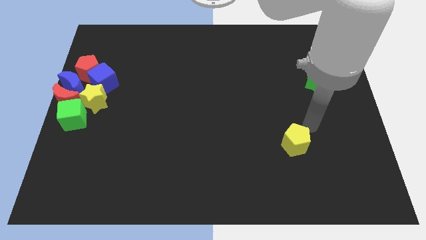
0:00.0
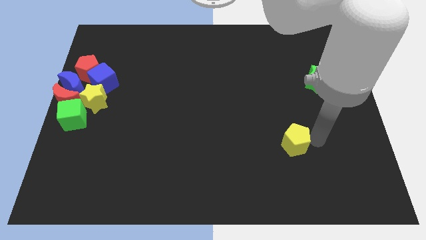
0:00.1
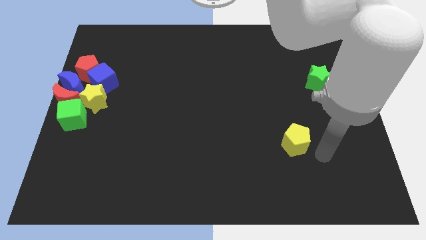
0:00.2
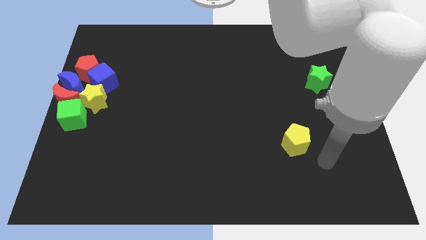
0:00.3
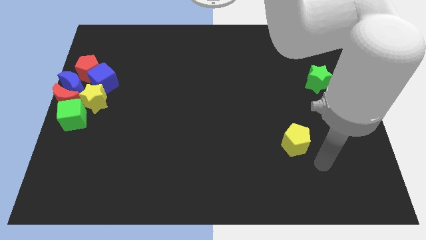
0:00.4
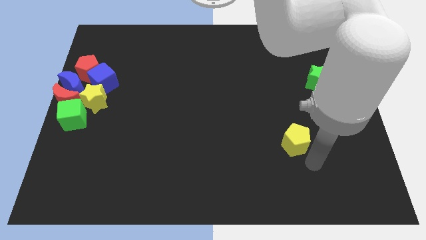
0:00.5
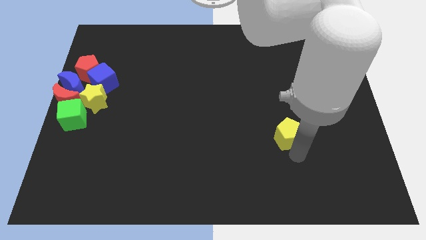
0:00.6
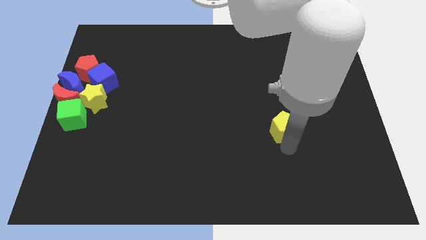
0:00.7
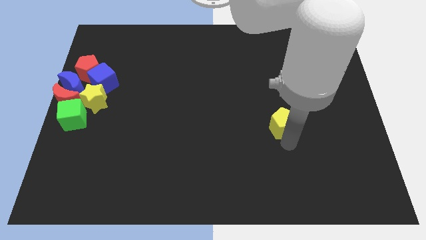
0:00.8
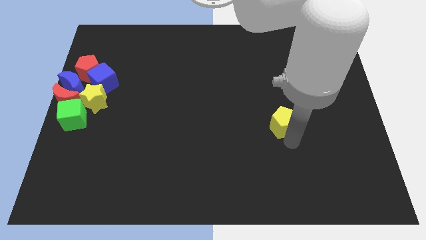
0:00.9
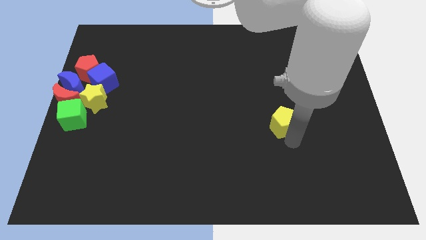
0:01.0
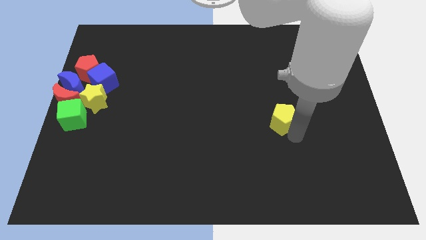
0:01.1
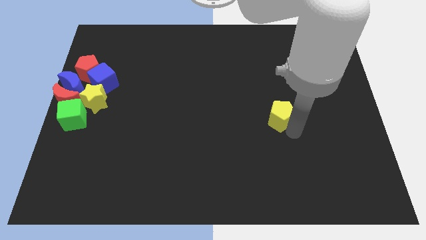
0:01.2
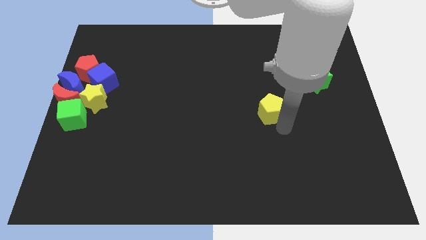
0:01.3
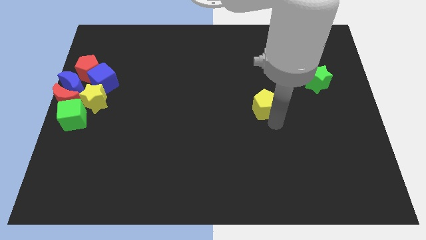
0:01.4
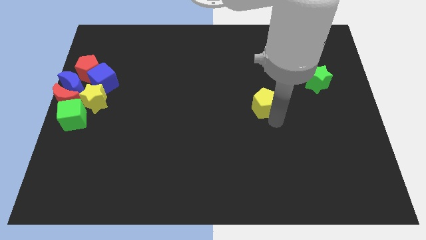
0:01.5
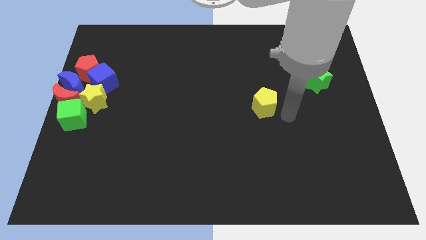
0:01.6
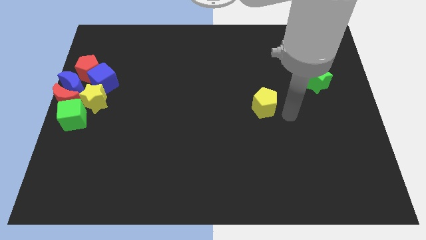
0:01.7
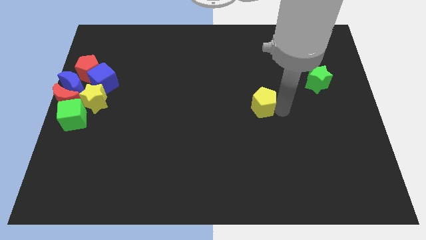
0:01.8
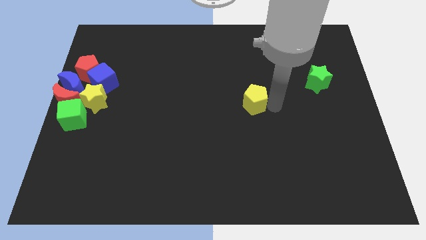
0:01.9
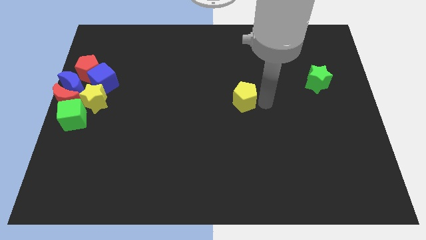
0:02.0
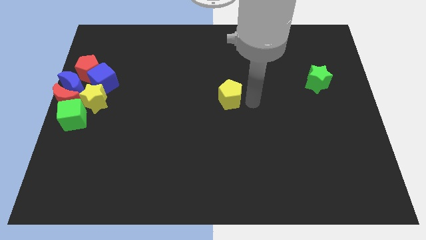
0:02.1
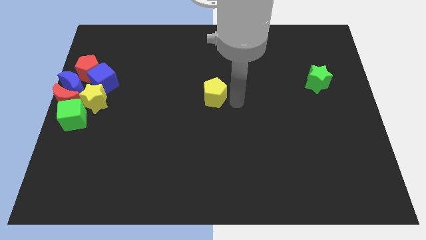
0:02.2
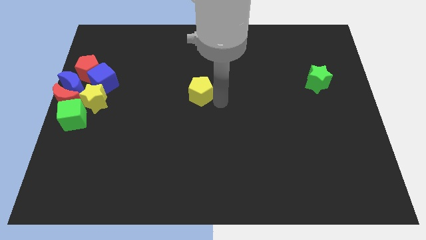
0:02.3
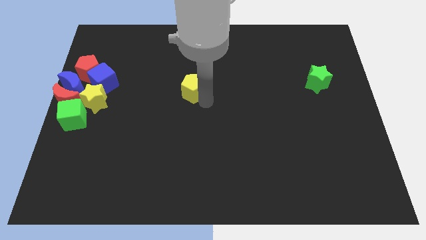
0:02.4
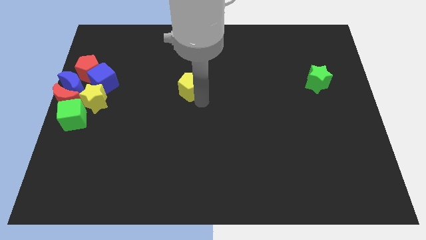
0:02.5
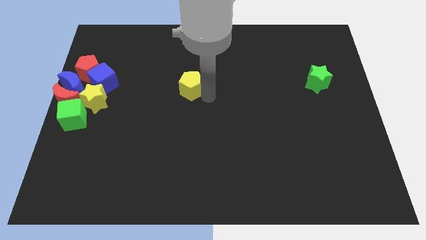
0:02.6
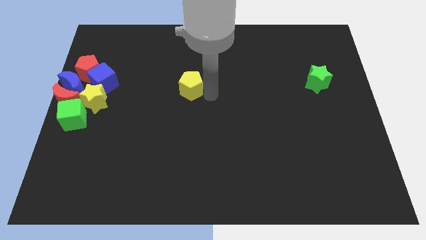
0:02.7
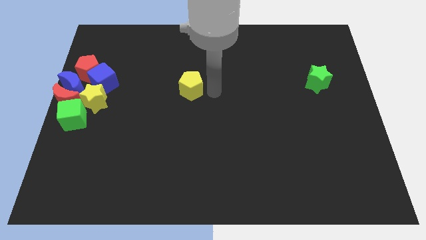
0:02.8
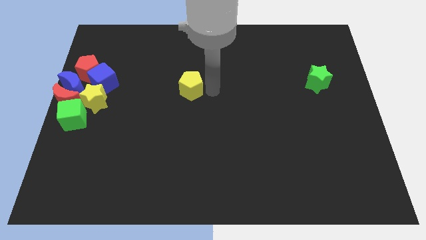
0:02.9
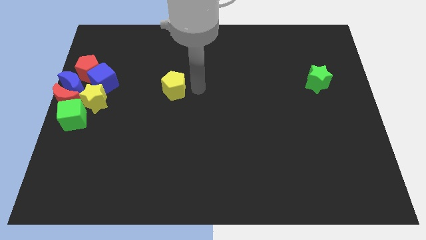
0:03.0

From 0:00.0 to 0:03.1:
push yellow pentagon to the right of blue cube

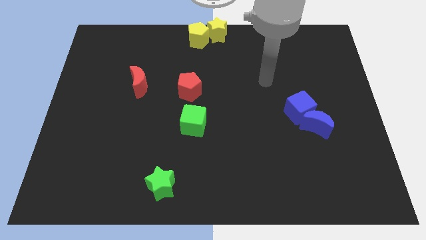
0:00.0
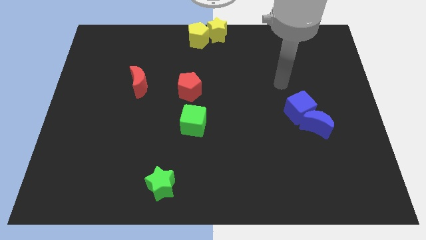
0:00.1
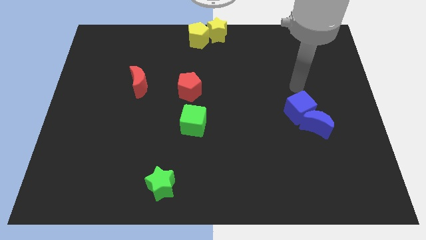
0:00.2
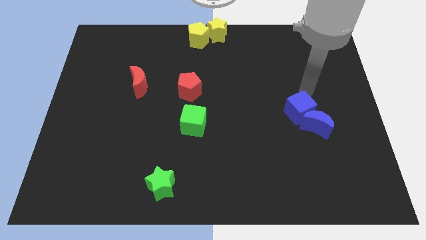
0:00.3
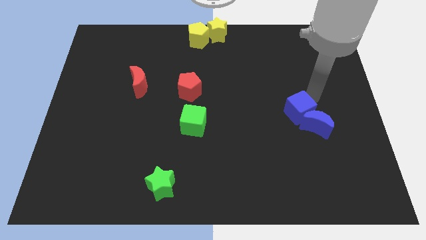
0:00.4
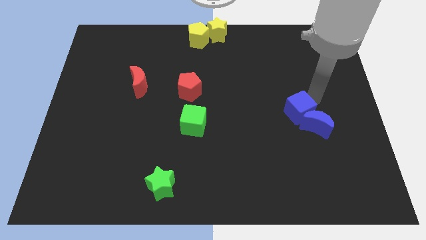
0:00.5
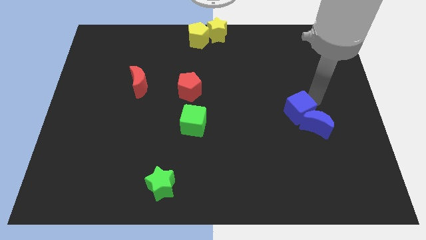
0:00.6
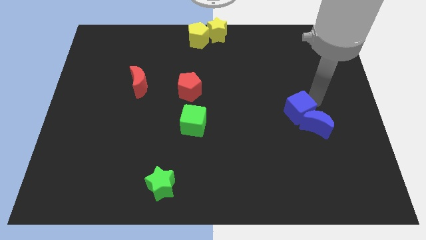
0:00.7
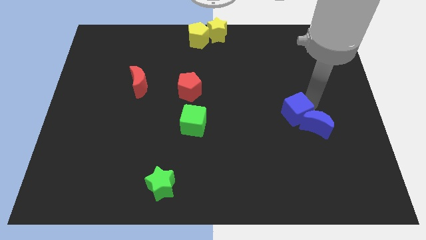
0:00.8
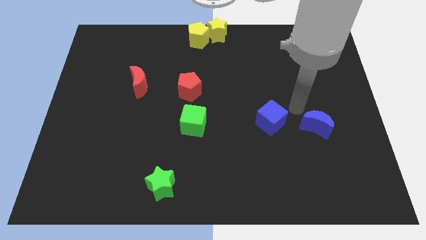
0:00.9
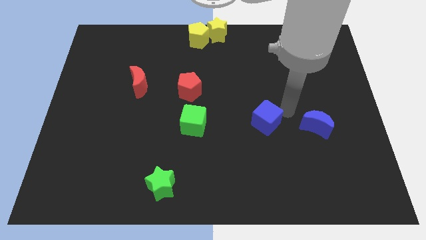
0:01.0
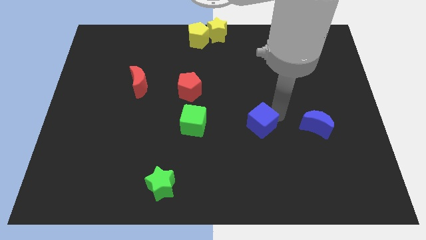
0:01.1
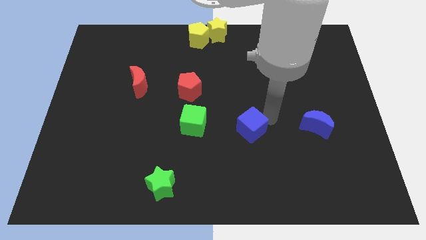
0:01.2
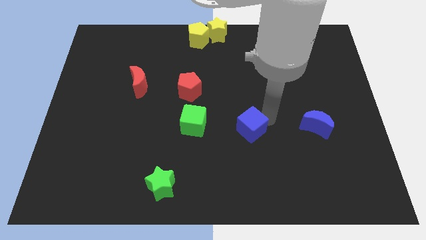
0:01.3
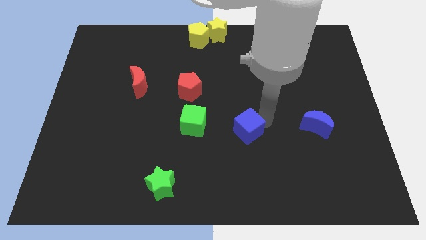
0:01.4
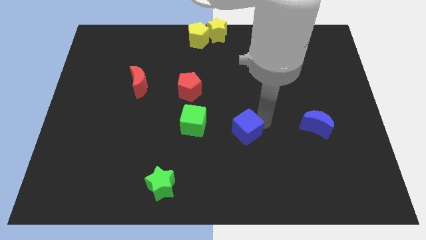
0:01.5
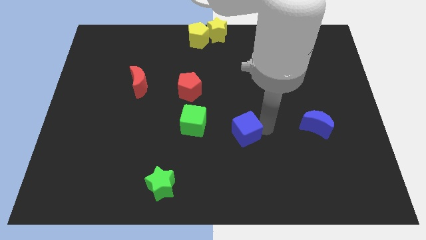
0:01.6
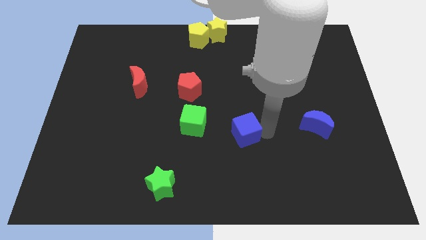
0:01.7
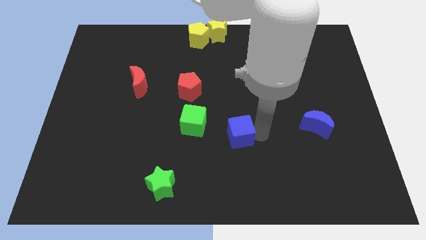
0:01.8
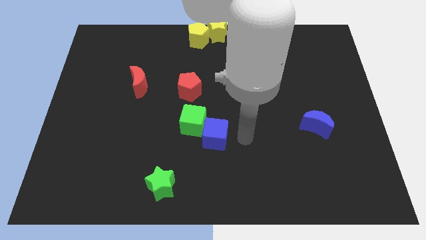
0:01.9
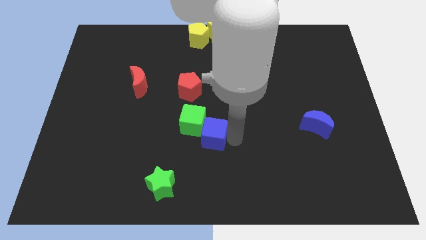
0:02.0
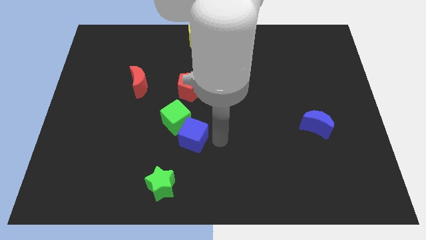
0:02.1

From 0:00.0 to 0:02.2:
push the blue cube into the green cube

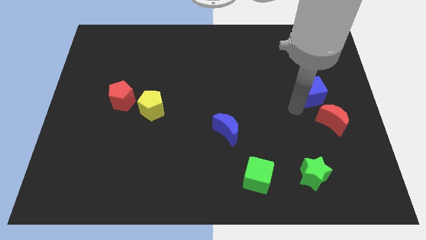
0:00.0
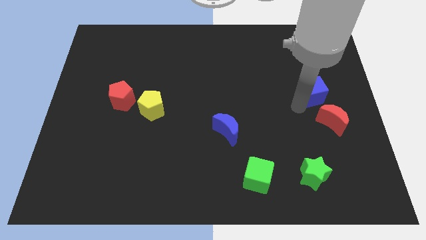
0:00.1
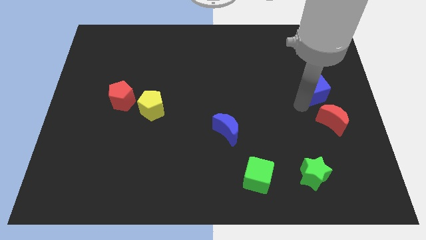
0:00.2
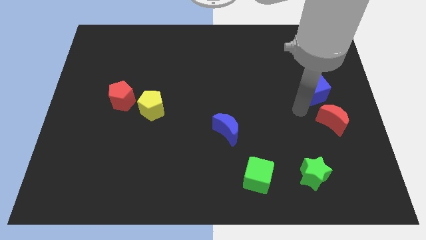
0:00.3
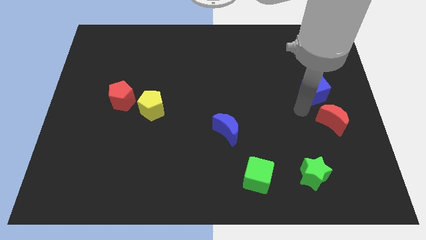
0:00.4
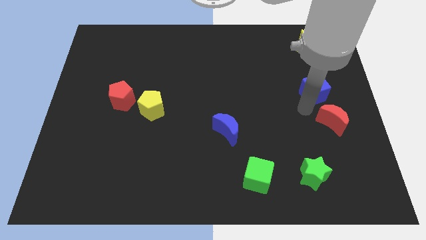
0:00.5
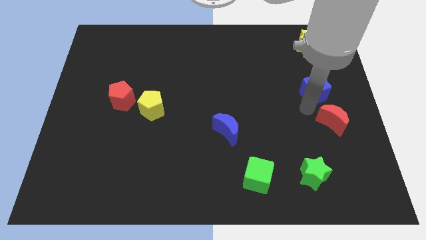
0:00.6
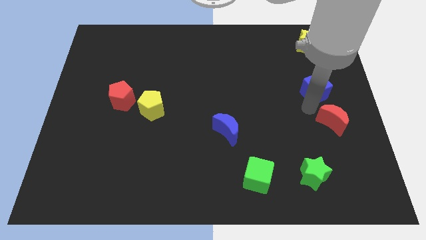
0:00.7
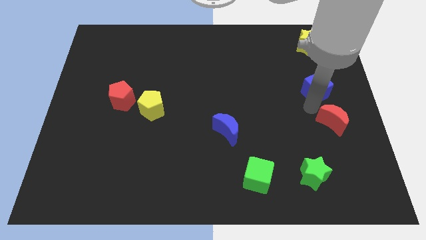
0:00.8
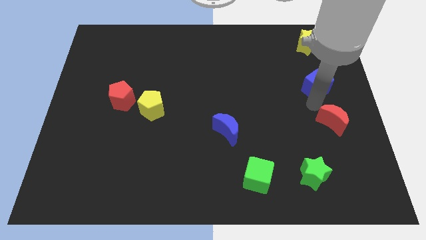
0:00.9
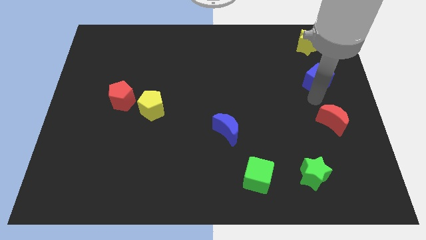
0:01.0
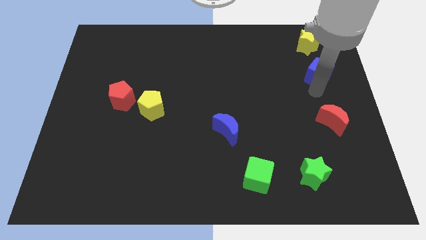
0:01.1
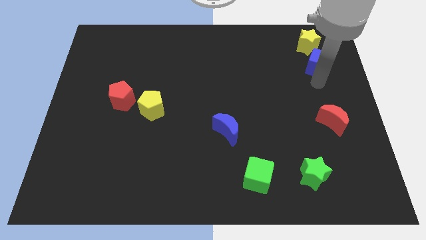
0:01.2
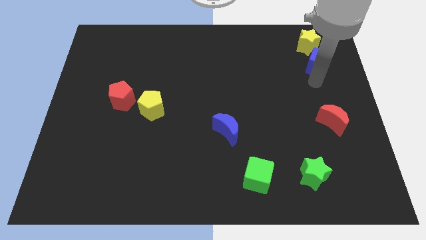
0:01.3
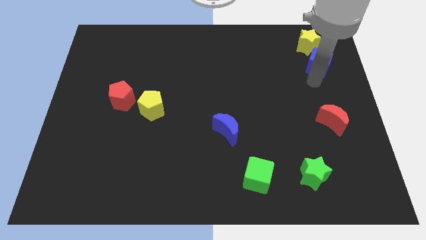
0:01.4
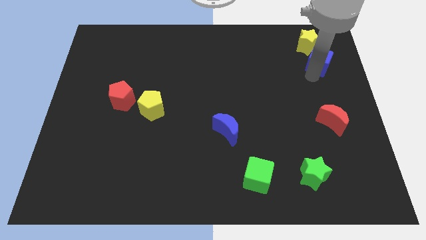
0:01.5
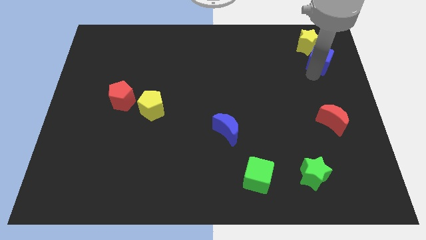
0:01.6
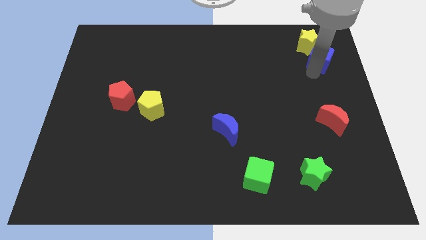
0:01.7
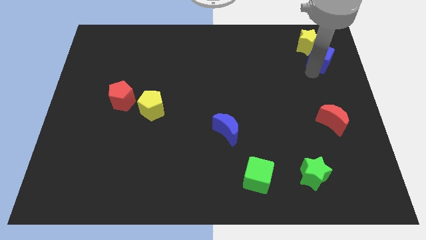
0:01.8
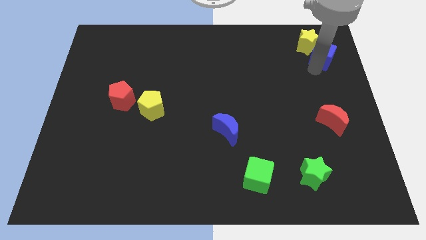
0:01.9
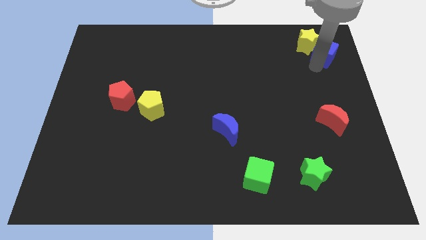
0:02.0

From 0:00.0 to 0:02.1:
move blue cube towards yellow star

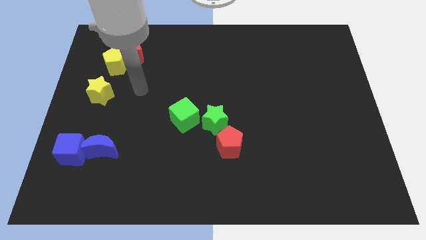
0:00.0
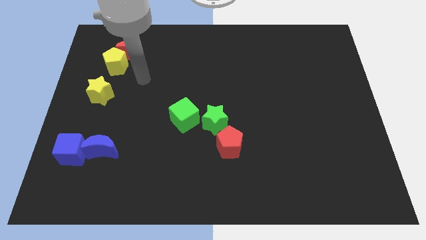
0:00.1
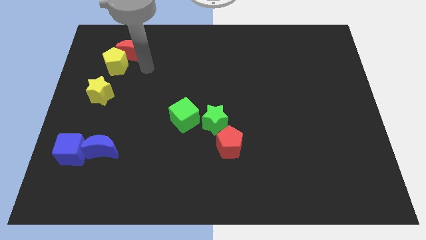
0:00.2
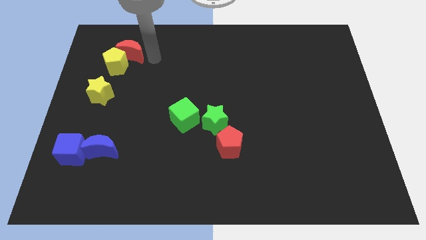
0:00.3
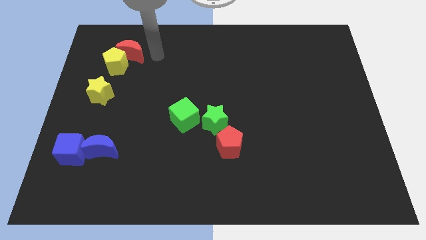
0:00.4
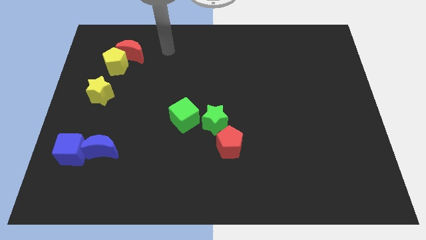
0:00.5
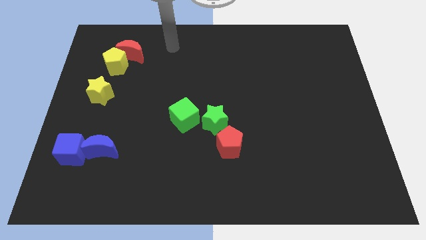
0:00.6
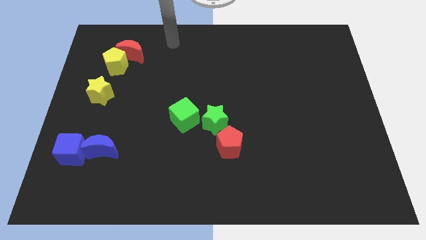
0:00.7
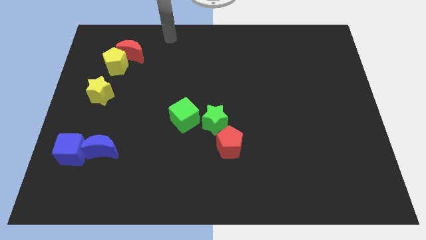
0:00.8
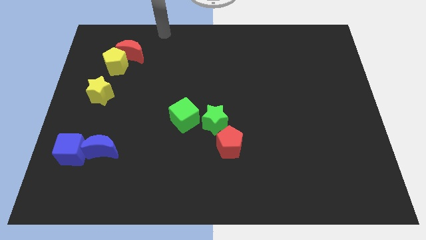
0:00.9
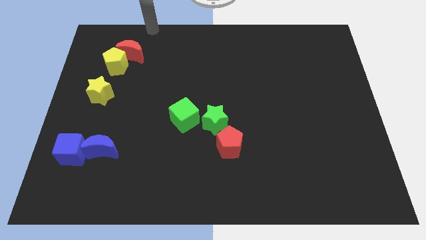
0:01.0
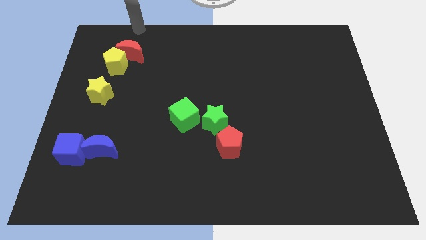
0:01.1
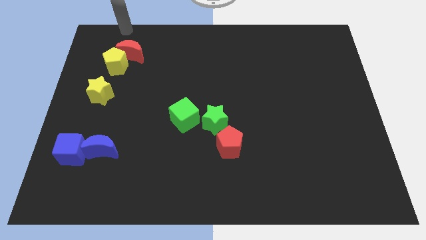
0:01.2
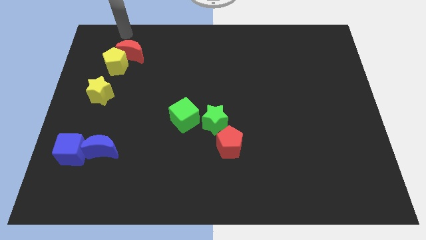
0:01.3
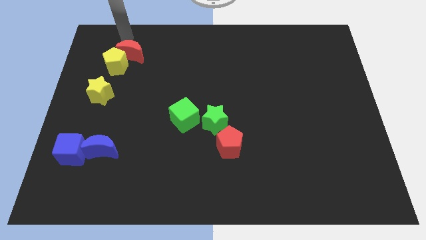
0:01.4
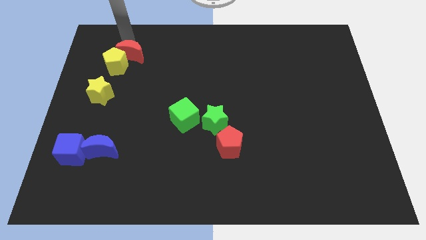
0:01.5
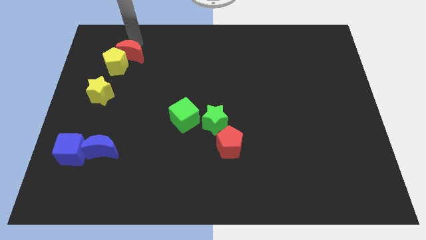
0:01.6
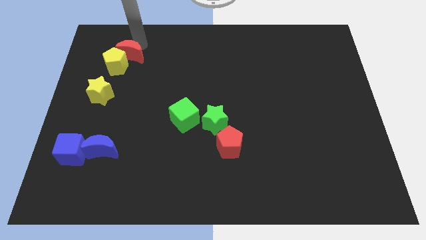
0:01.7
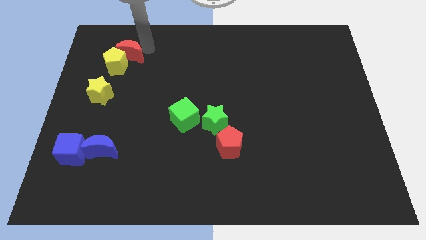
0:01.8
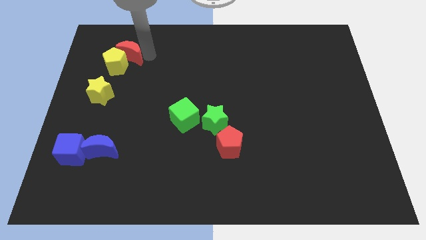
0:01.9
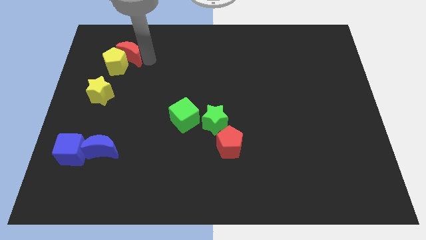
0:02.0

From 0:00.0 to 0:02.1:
place the arm to the top right of red crescent
